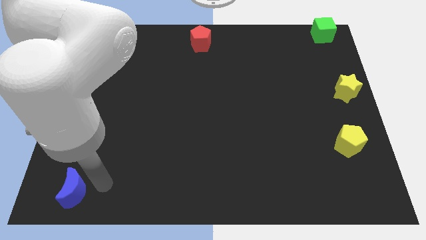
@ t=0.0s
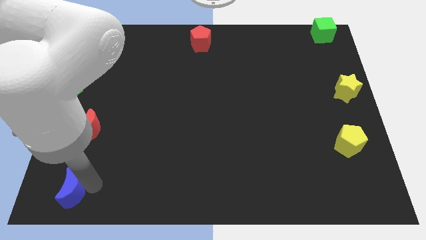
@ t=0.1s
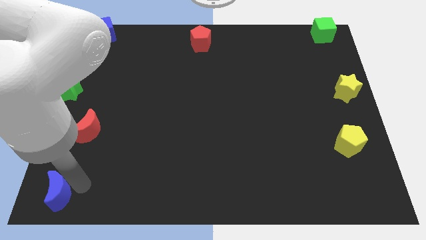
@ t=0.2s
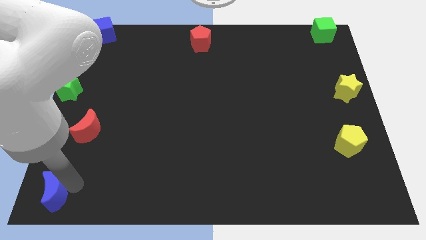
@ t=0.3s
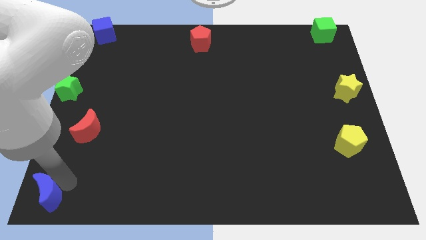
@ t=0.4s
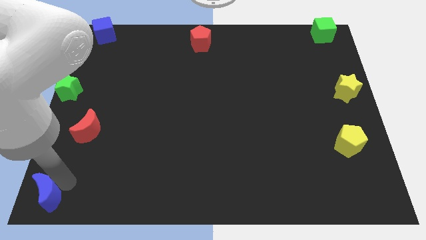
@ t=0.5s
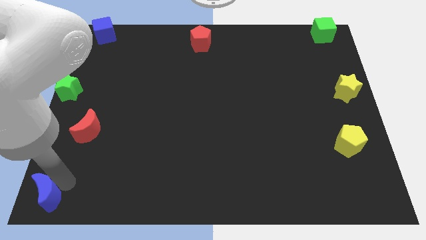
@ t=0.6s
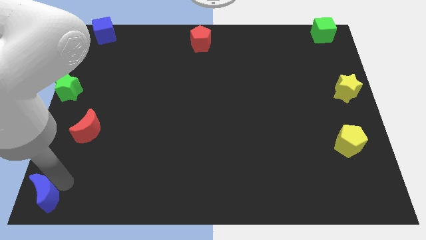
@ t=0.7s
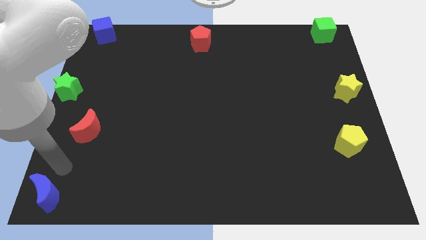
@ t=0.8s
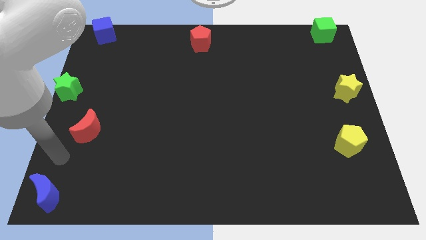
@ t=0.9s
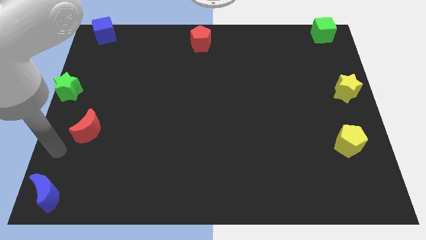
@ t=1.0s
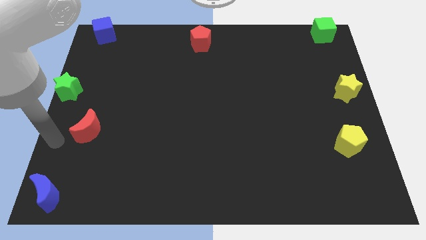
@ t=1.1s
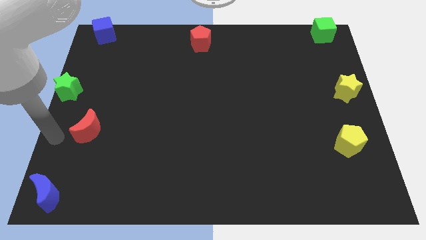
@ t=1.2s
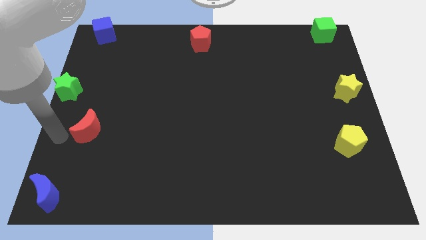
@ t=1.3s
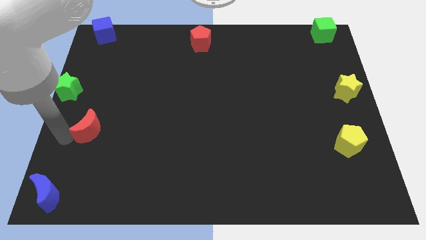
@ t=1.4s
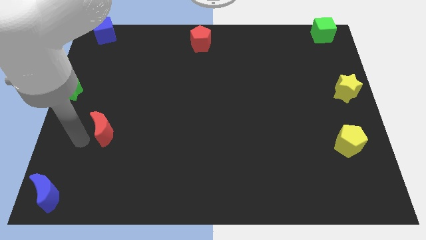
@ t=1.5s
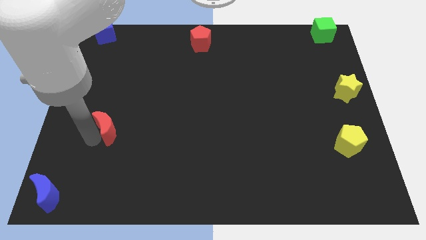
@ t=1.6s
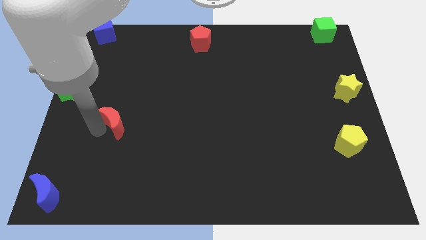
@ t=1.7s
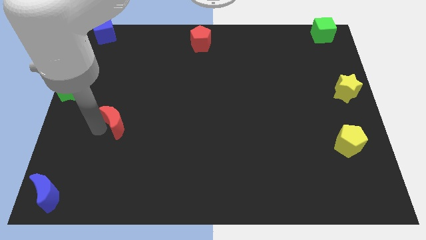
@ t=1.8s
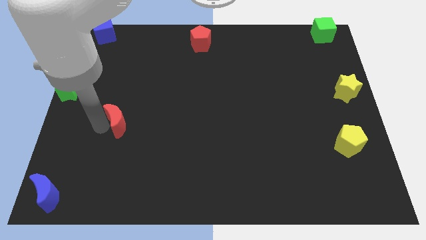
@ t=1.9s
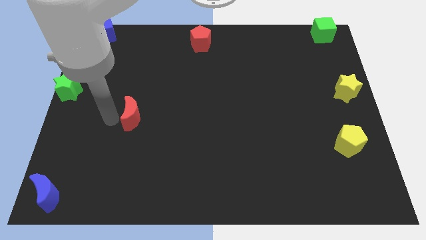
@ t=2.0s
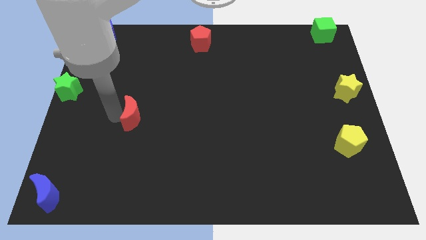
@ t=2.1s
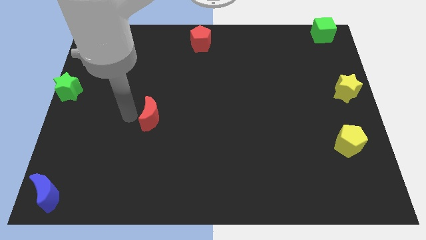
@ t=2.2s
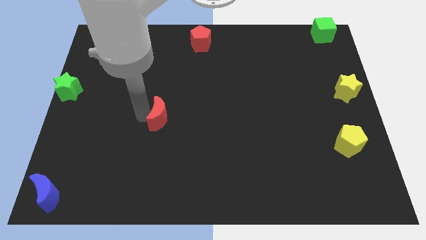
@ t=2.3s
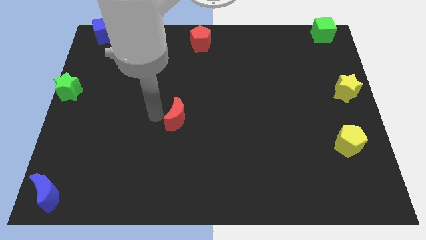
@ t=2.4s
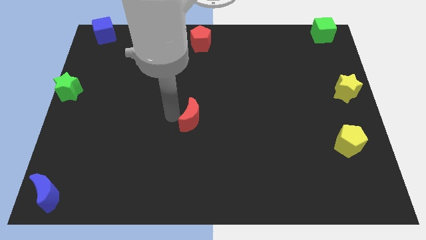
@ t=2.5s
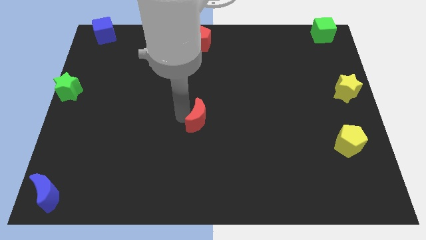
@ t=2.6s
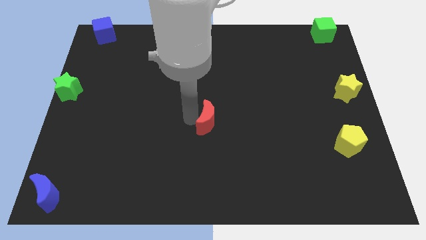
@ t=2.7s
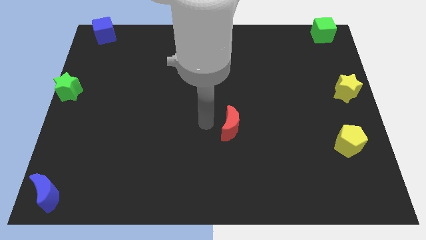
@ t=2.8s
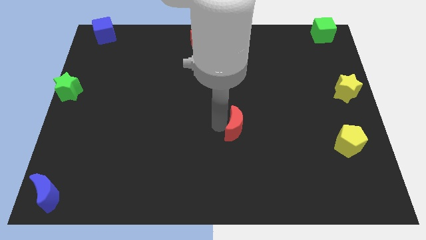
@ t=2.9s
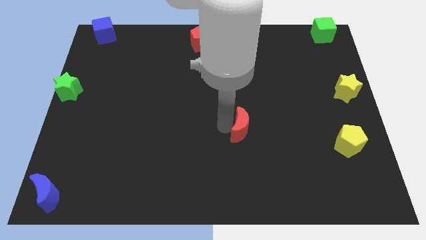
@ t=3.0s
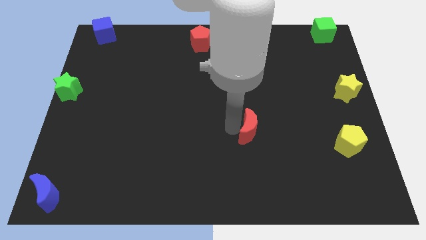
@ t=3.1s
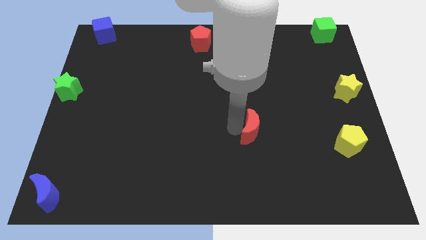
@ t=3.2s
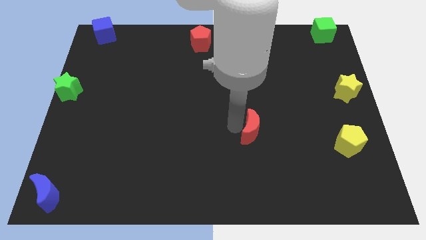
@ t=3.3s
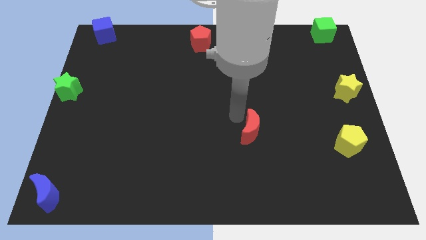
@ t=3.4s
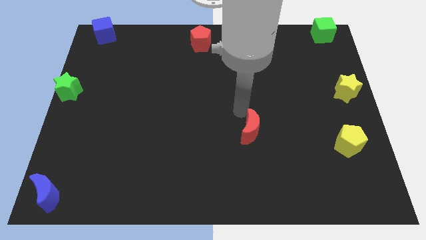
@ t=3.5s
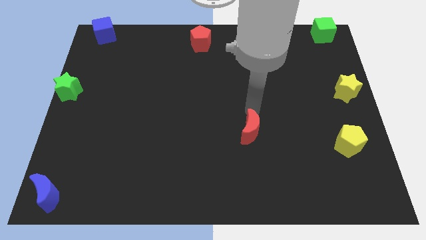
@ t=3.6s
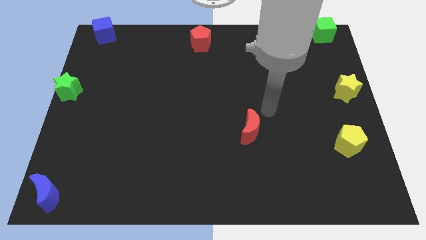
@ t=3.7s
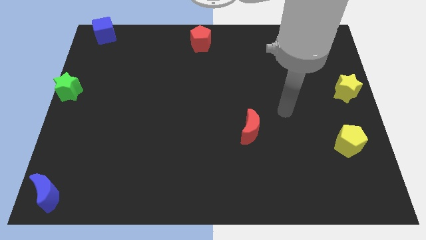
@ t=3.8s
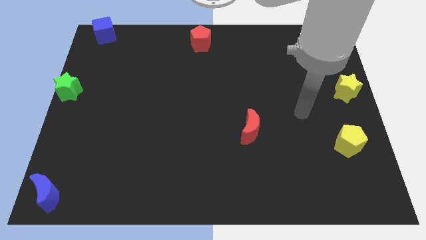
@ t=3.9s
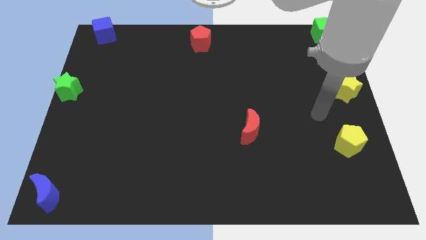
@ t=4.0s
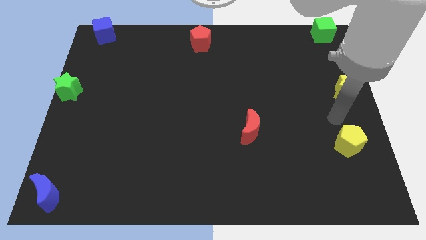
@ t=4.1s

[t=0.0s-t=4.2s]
move the red crescent towards the yellow pentagon

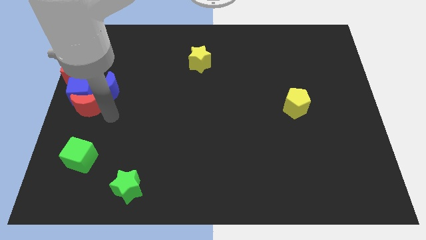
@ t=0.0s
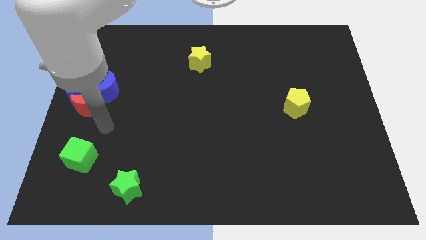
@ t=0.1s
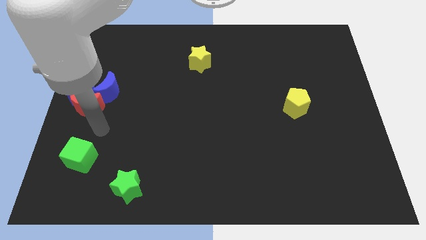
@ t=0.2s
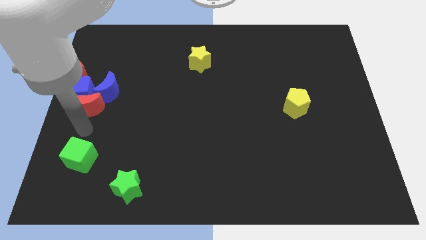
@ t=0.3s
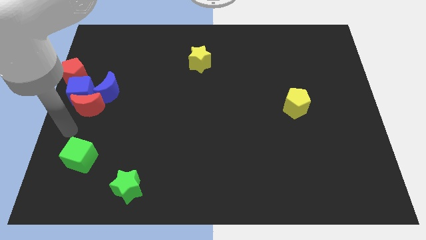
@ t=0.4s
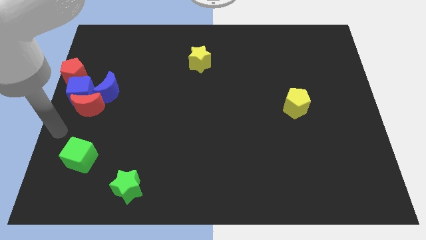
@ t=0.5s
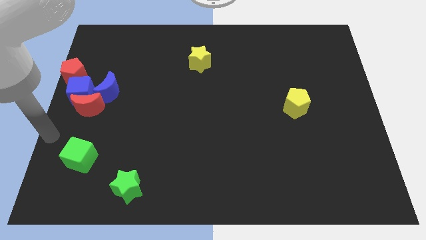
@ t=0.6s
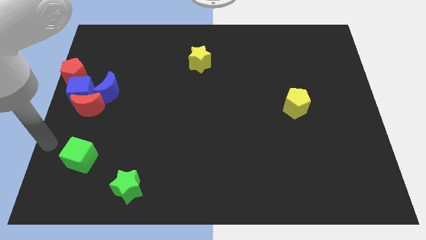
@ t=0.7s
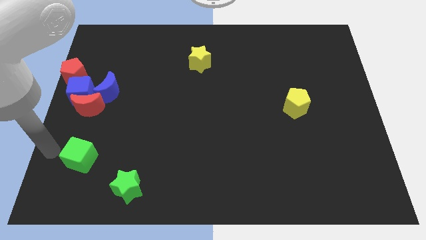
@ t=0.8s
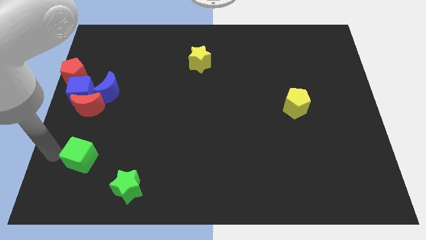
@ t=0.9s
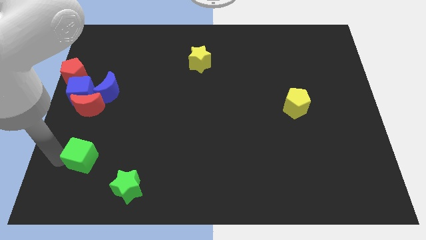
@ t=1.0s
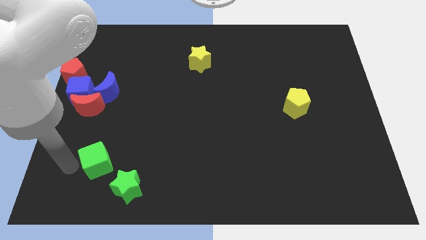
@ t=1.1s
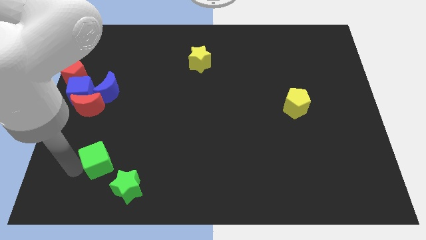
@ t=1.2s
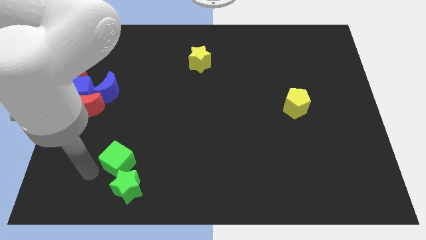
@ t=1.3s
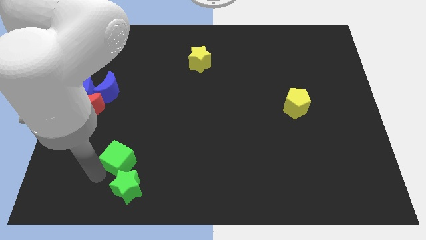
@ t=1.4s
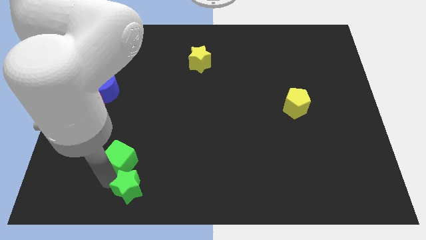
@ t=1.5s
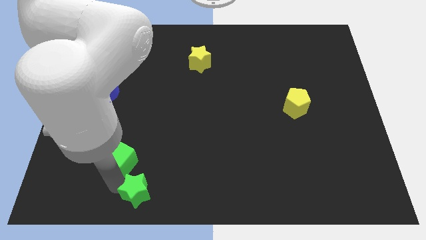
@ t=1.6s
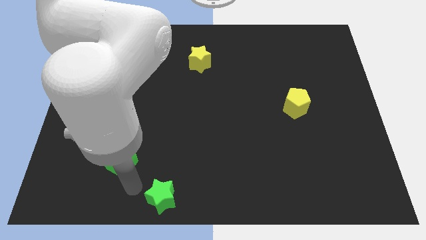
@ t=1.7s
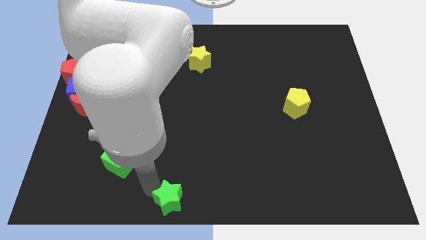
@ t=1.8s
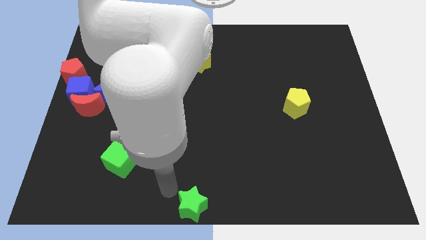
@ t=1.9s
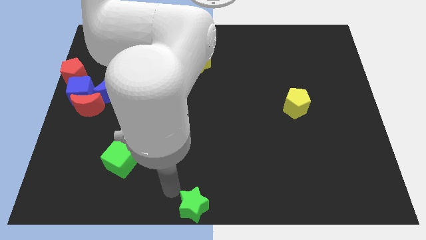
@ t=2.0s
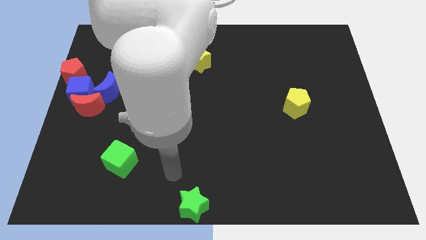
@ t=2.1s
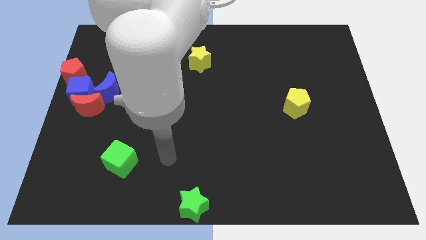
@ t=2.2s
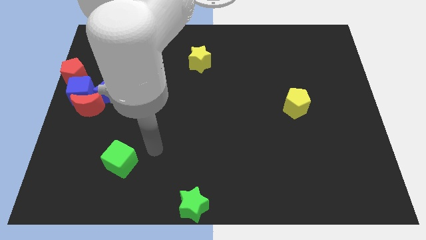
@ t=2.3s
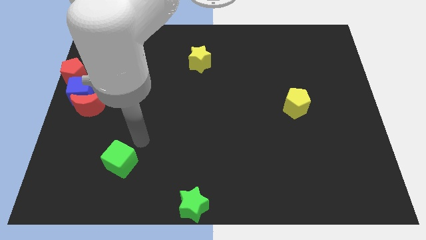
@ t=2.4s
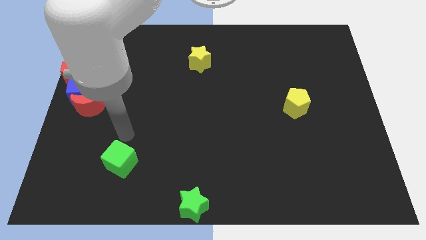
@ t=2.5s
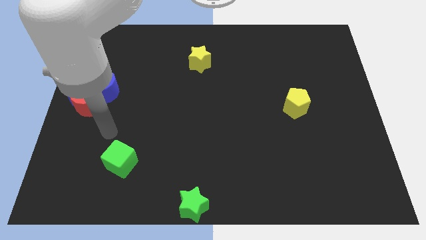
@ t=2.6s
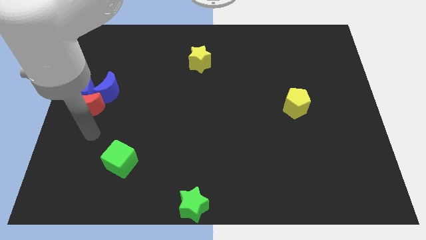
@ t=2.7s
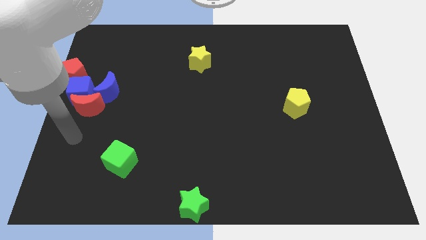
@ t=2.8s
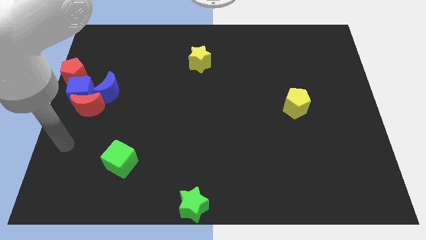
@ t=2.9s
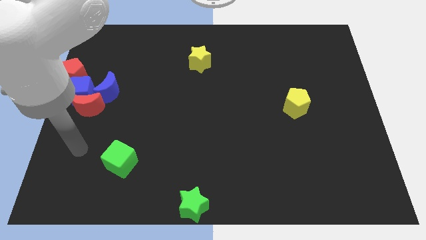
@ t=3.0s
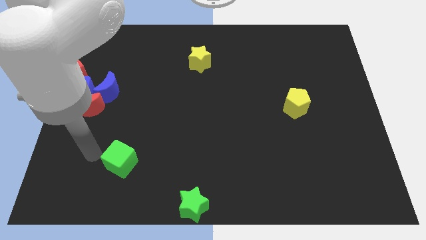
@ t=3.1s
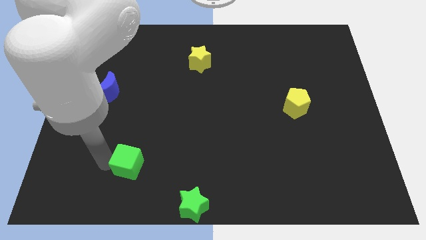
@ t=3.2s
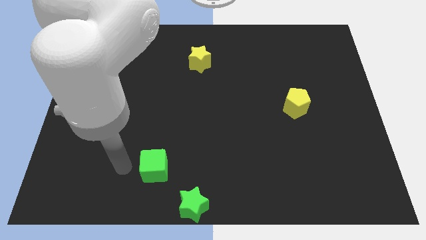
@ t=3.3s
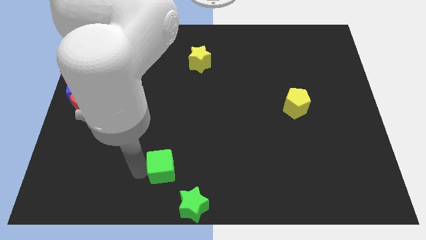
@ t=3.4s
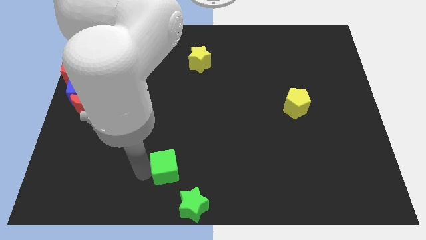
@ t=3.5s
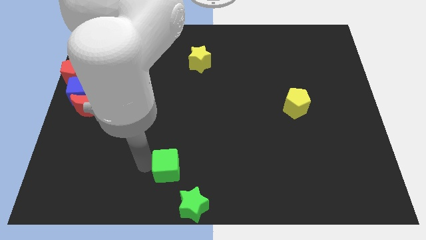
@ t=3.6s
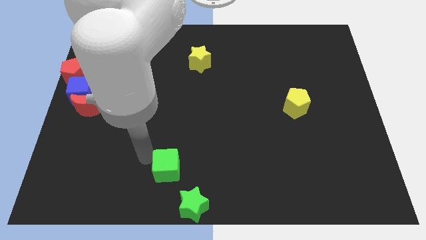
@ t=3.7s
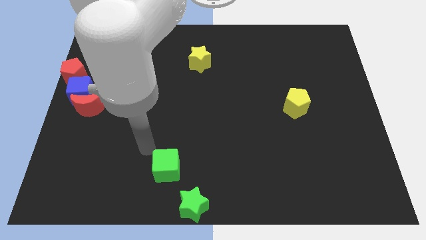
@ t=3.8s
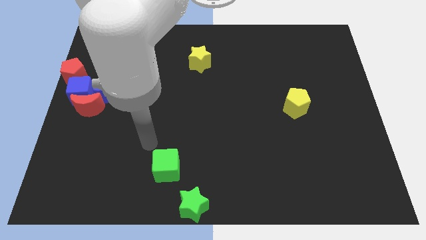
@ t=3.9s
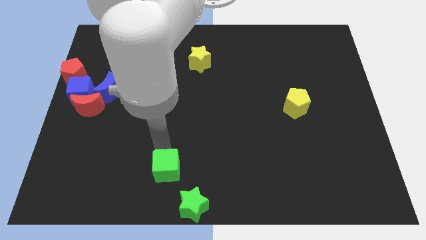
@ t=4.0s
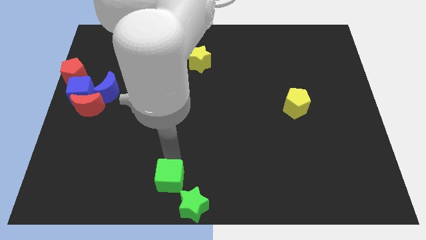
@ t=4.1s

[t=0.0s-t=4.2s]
push the green blocks towards the bottom side of the board

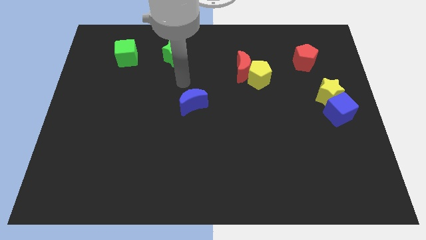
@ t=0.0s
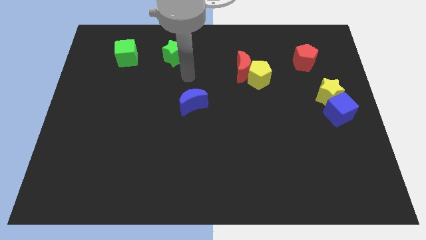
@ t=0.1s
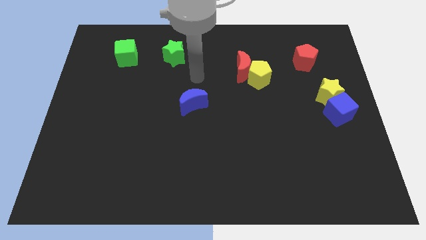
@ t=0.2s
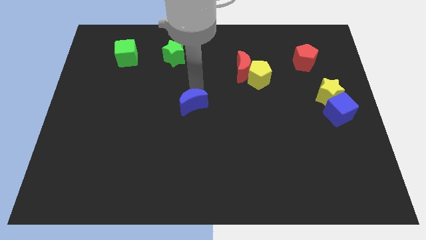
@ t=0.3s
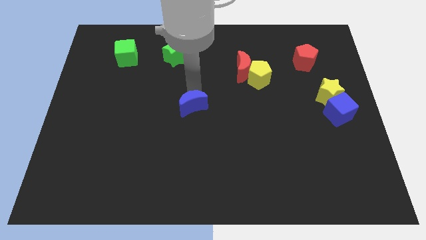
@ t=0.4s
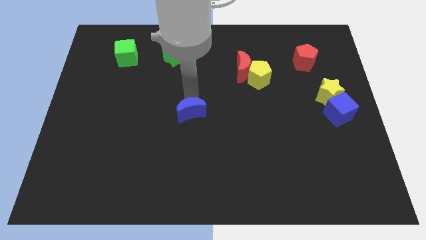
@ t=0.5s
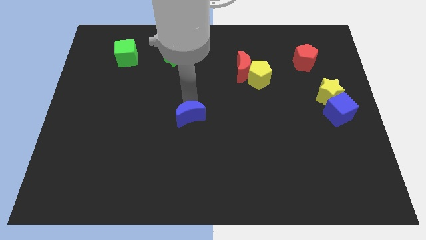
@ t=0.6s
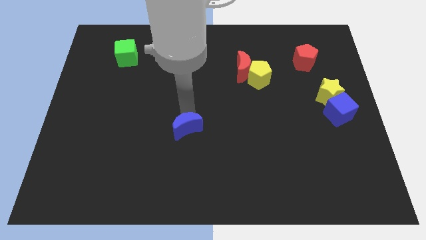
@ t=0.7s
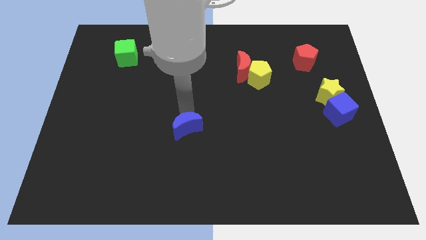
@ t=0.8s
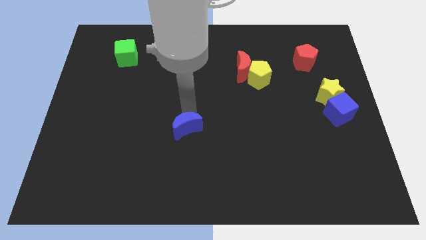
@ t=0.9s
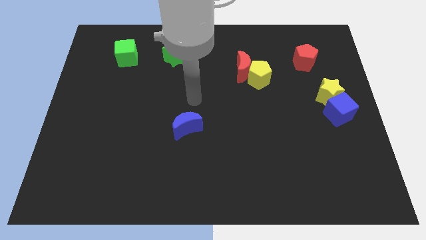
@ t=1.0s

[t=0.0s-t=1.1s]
push the blue moon towards the bottom
